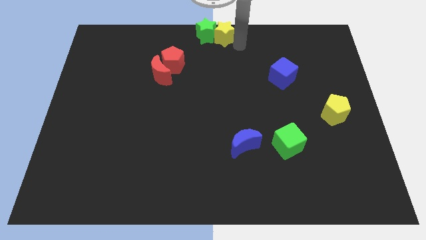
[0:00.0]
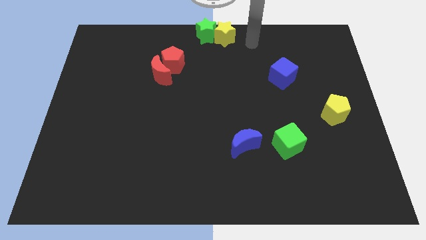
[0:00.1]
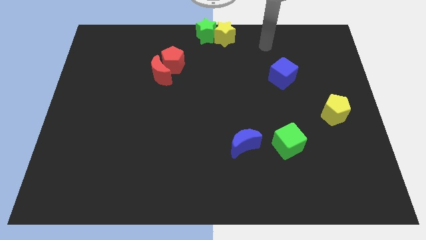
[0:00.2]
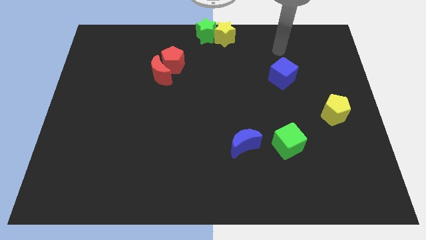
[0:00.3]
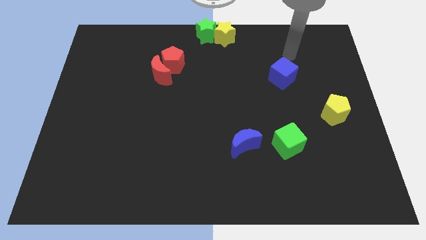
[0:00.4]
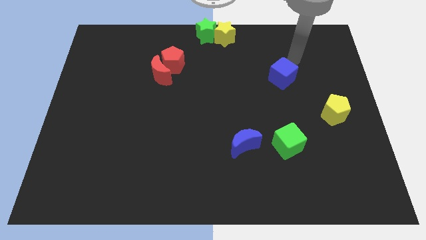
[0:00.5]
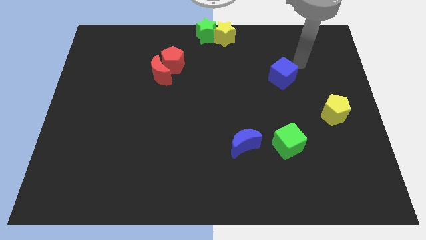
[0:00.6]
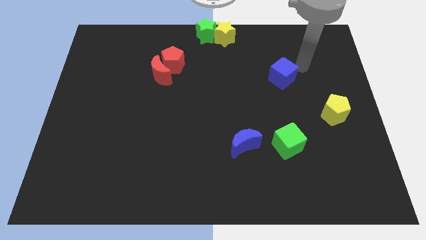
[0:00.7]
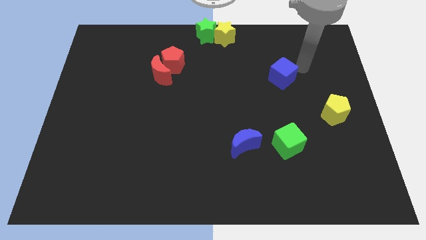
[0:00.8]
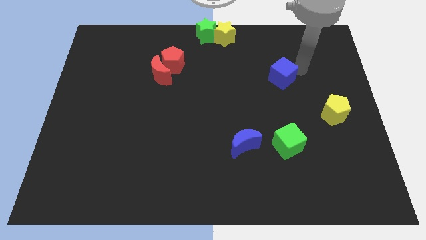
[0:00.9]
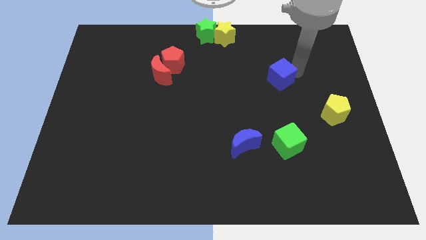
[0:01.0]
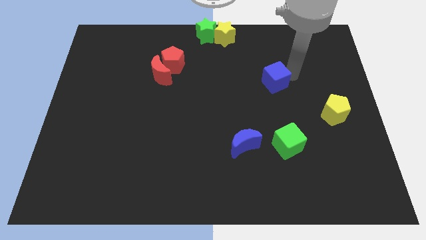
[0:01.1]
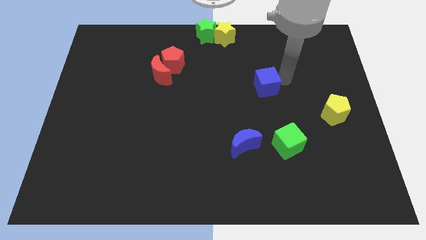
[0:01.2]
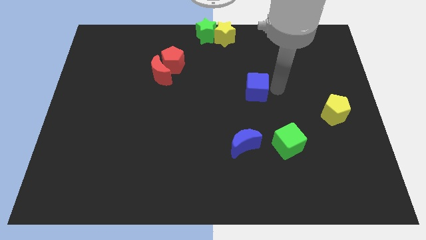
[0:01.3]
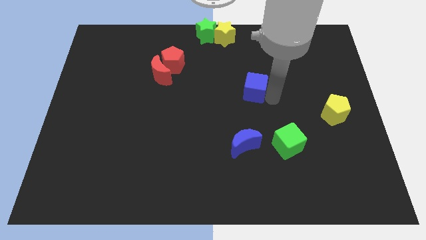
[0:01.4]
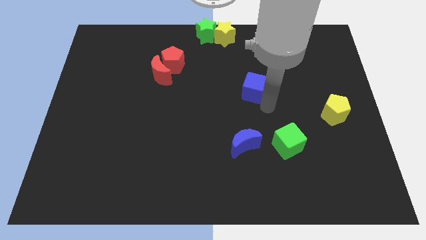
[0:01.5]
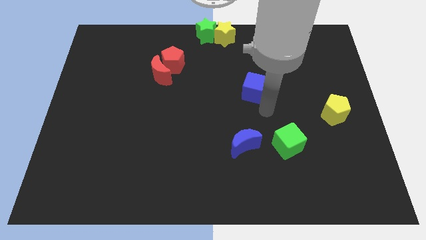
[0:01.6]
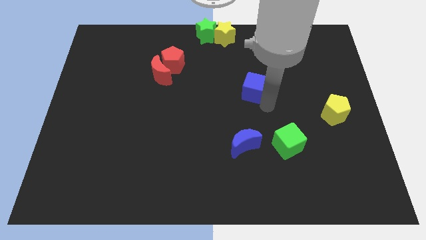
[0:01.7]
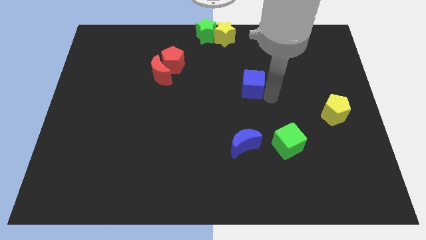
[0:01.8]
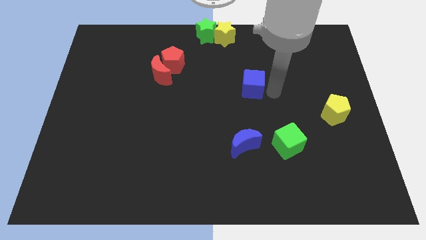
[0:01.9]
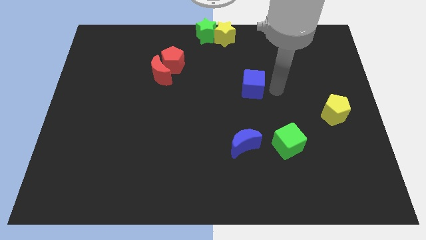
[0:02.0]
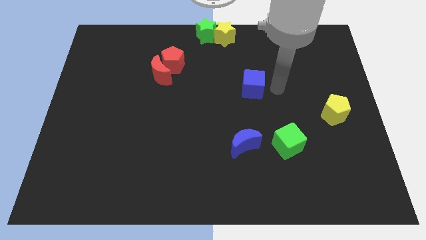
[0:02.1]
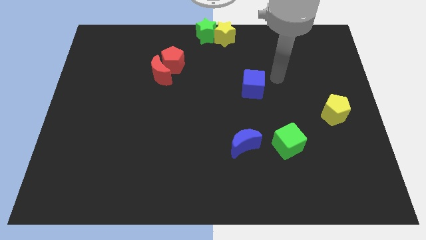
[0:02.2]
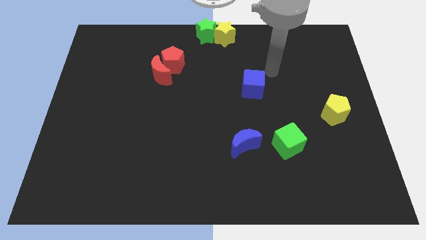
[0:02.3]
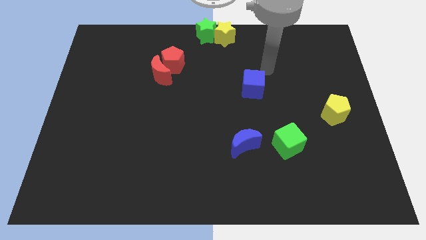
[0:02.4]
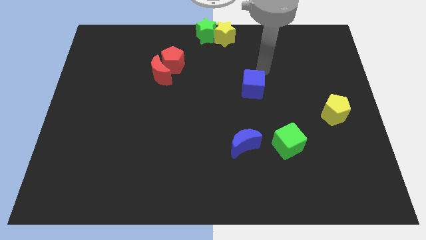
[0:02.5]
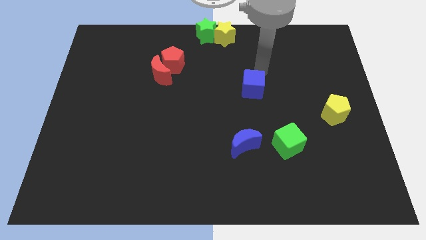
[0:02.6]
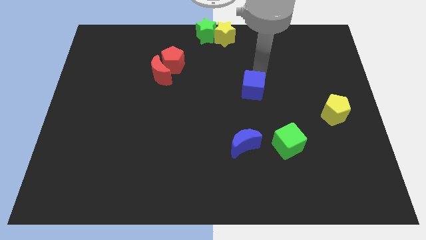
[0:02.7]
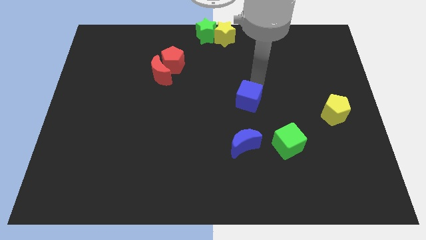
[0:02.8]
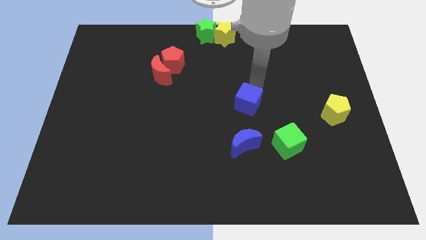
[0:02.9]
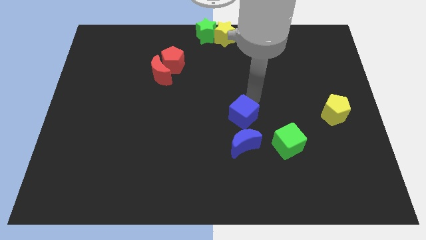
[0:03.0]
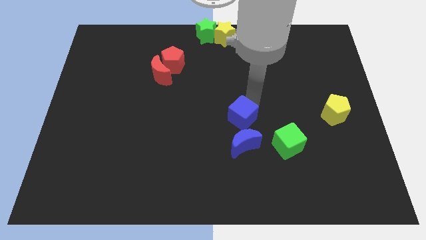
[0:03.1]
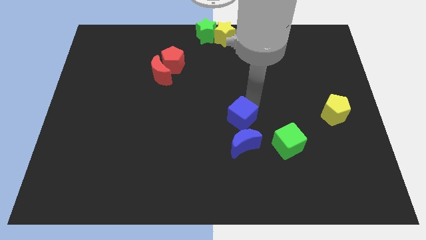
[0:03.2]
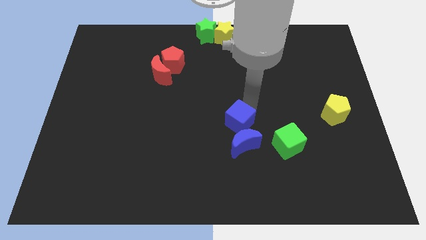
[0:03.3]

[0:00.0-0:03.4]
place the blue cube at the top of blue crescent

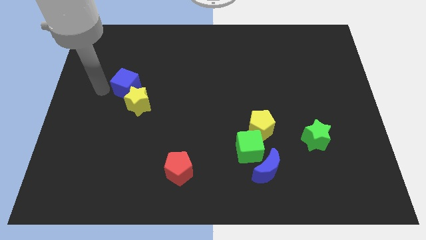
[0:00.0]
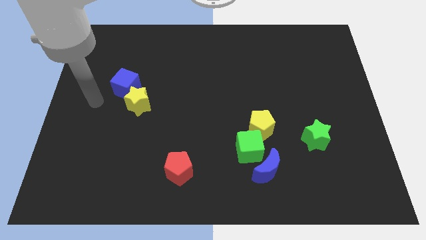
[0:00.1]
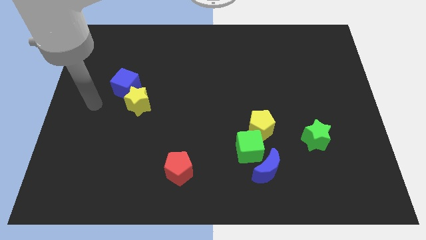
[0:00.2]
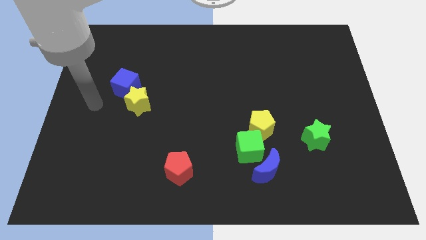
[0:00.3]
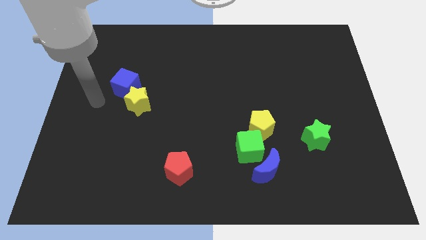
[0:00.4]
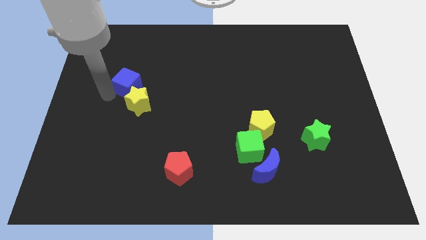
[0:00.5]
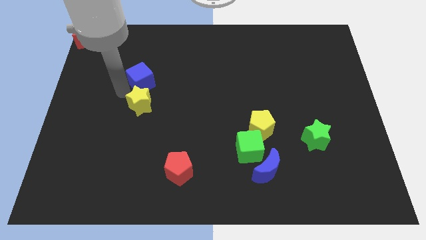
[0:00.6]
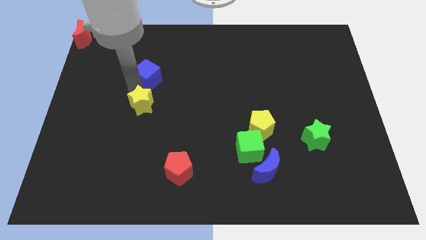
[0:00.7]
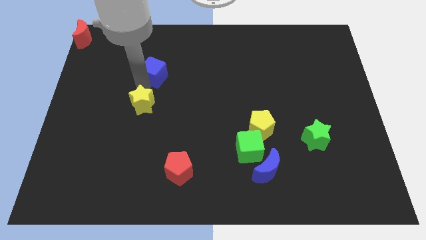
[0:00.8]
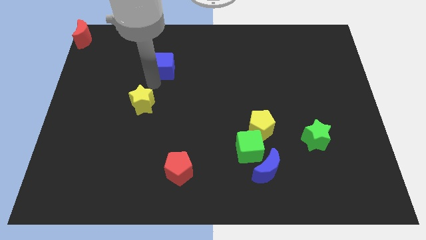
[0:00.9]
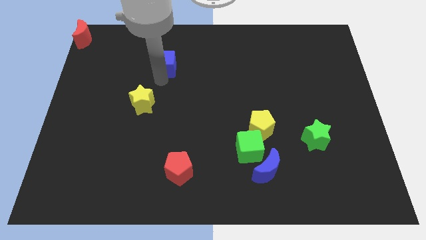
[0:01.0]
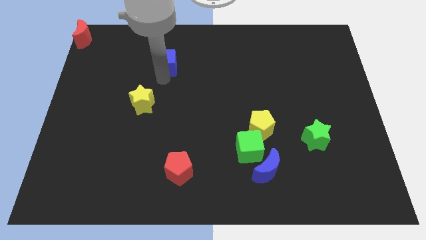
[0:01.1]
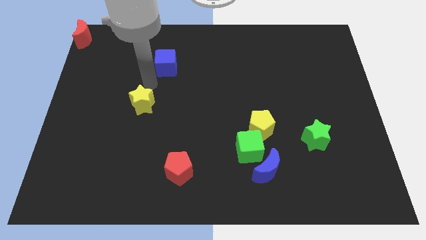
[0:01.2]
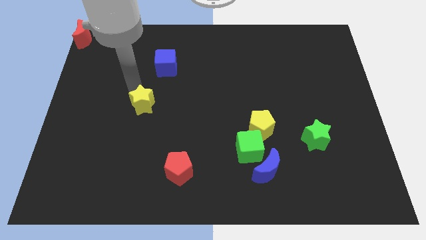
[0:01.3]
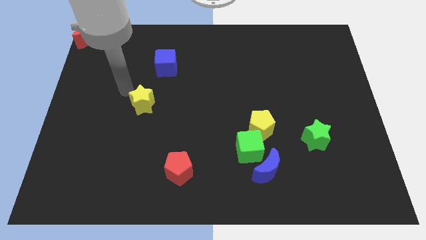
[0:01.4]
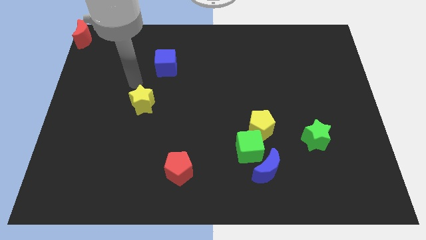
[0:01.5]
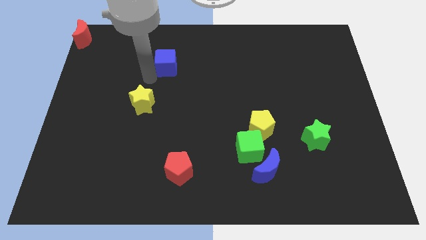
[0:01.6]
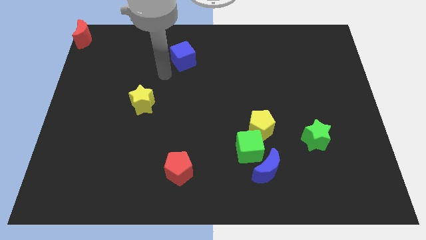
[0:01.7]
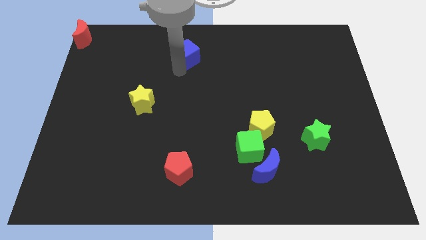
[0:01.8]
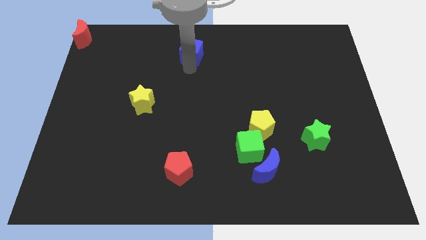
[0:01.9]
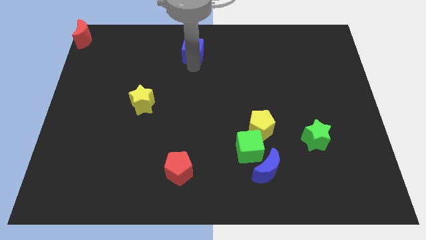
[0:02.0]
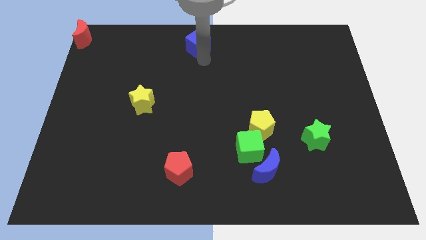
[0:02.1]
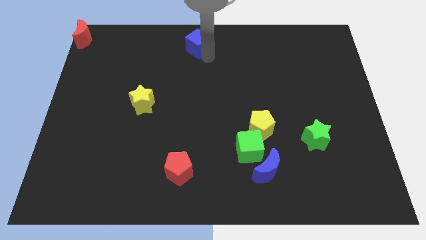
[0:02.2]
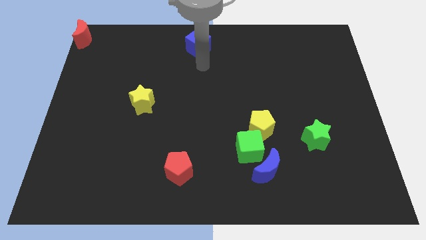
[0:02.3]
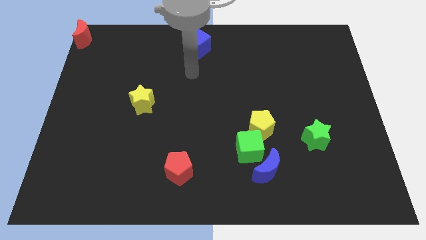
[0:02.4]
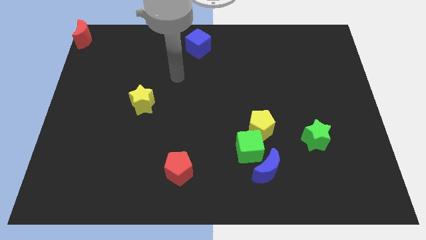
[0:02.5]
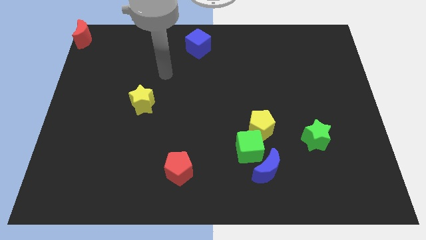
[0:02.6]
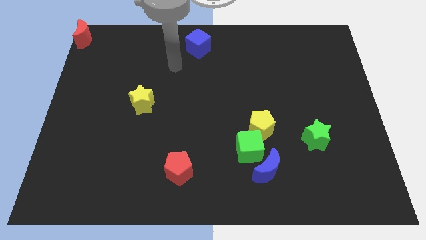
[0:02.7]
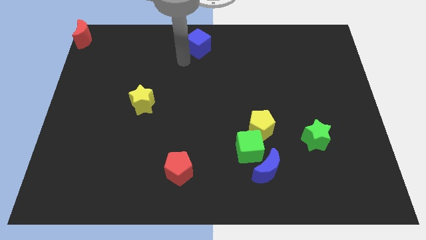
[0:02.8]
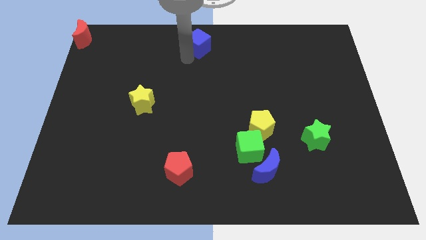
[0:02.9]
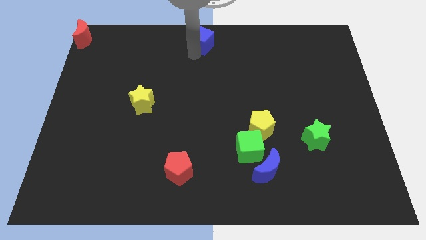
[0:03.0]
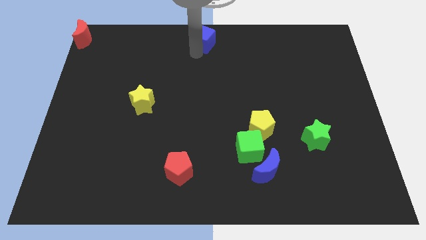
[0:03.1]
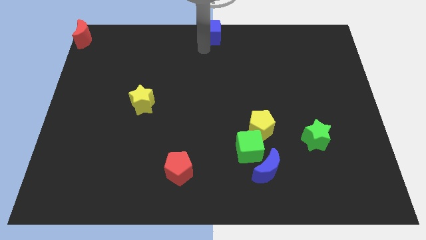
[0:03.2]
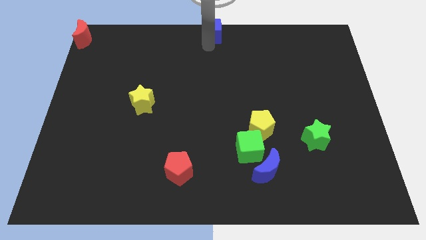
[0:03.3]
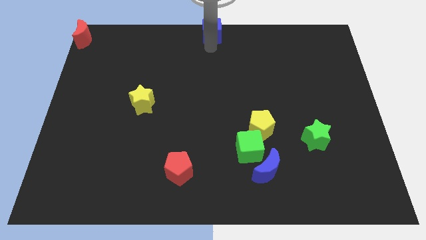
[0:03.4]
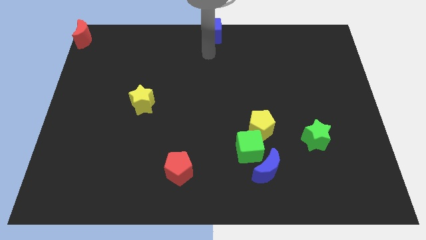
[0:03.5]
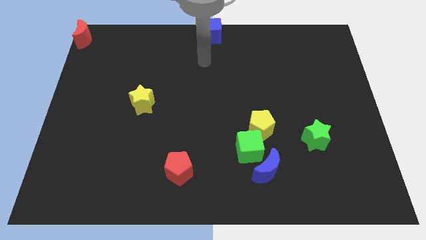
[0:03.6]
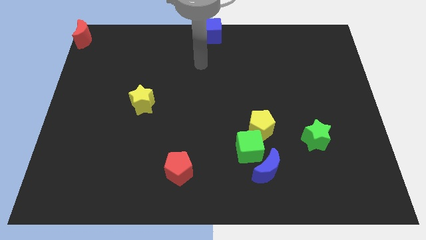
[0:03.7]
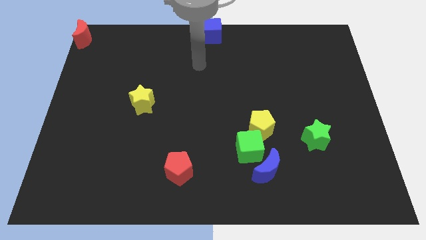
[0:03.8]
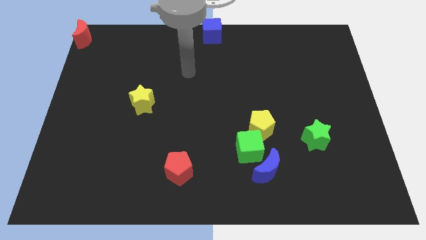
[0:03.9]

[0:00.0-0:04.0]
push the blue cube to the top center

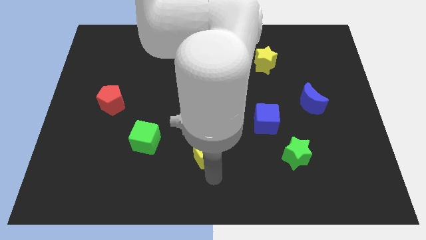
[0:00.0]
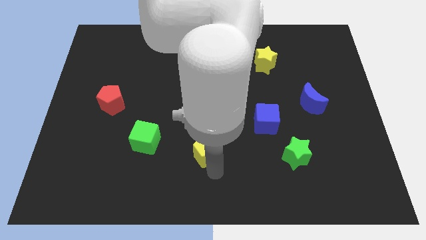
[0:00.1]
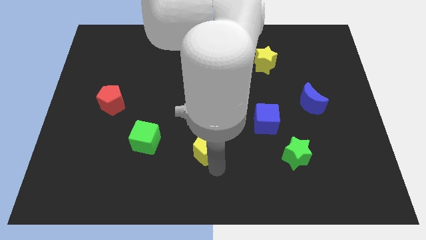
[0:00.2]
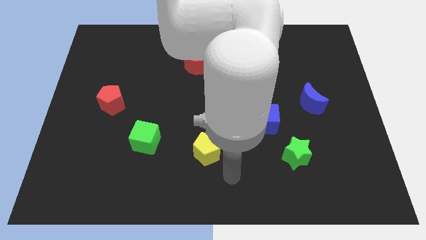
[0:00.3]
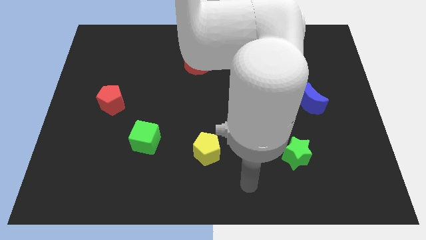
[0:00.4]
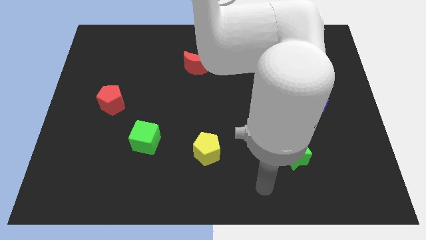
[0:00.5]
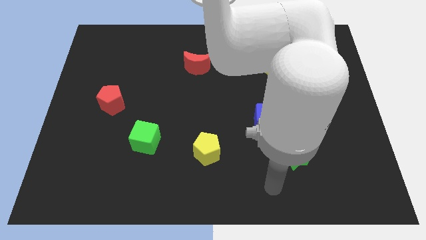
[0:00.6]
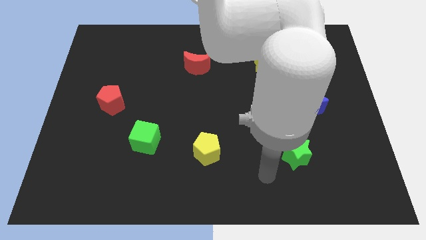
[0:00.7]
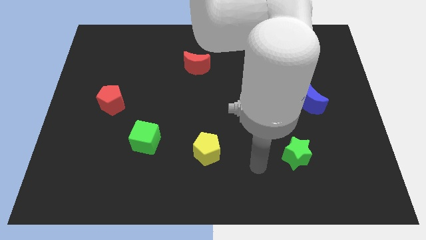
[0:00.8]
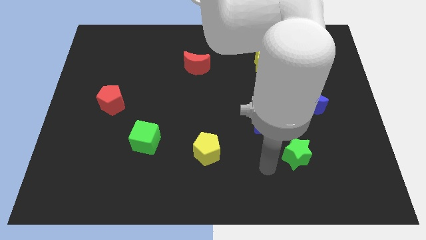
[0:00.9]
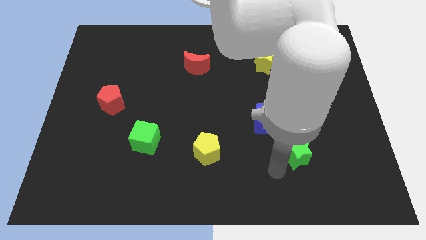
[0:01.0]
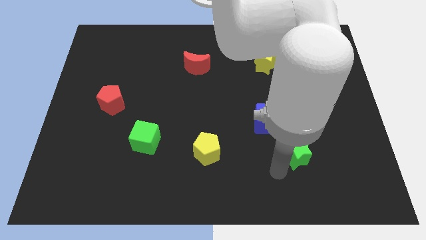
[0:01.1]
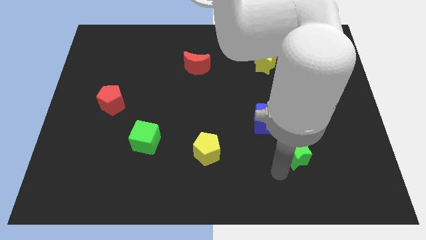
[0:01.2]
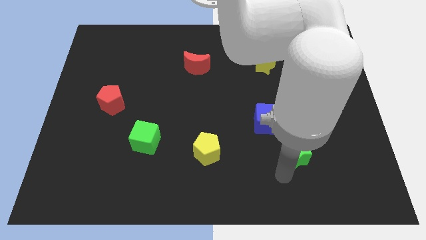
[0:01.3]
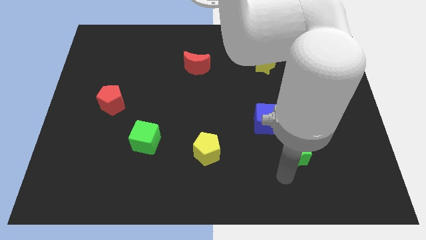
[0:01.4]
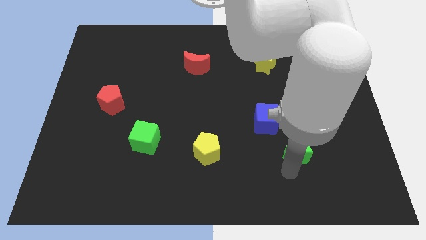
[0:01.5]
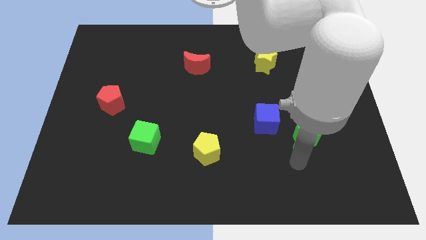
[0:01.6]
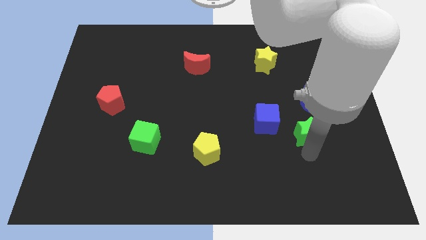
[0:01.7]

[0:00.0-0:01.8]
place the green star near to the blue cube
